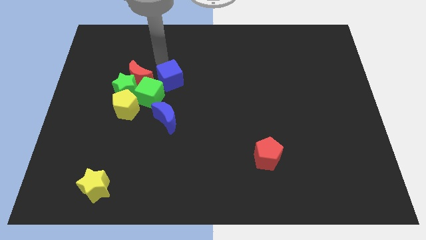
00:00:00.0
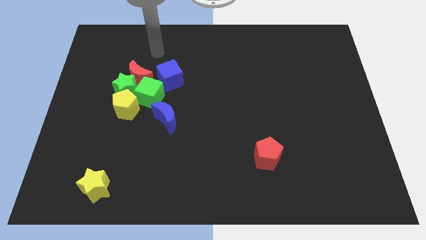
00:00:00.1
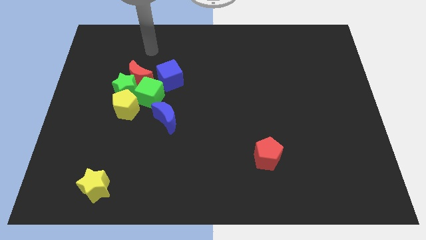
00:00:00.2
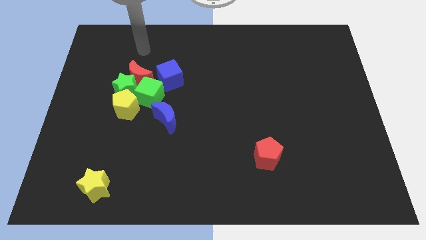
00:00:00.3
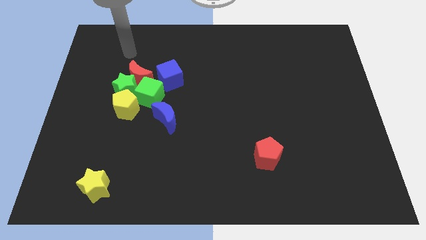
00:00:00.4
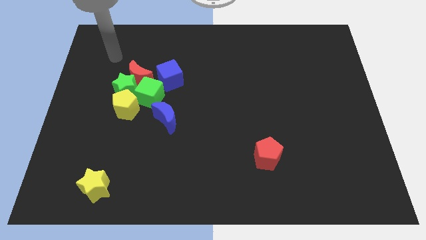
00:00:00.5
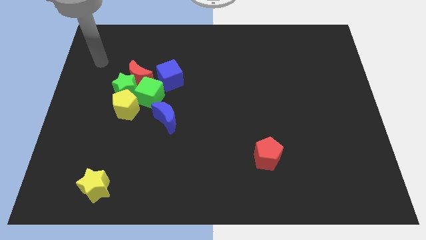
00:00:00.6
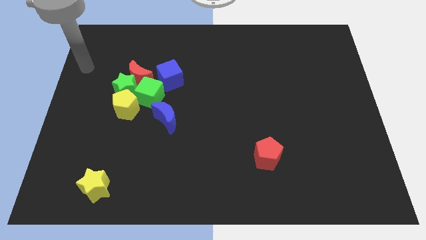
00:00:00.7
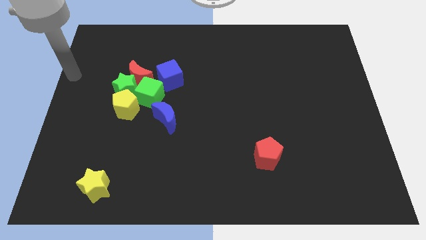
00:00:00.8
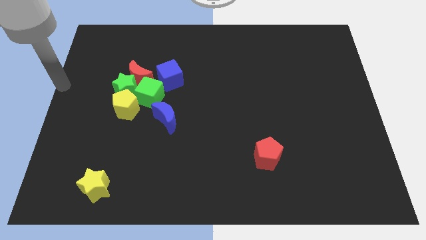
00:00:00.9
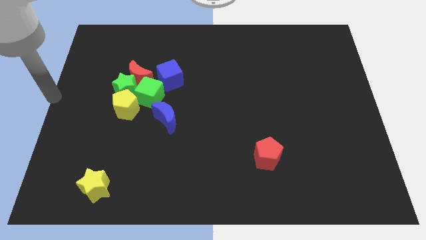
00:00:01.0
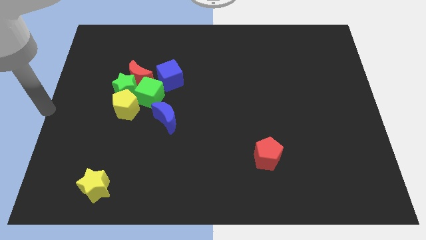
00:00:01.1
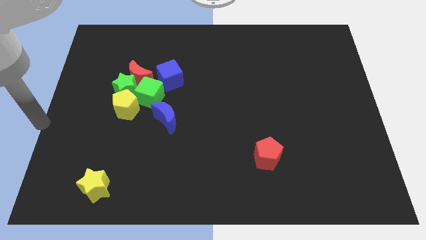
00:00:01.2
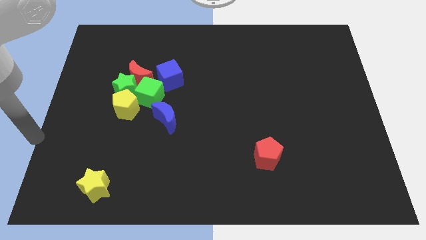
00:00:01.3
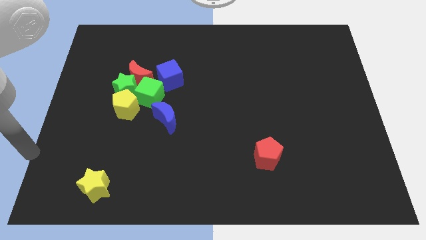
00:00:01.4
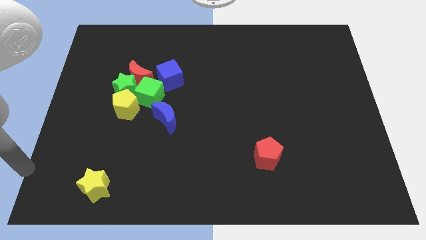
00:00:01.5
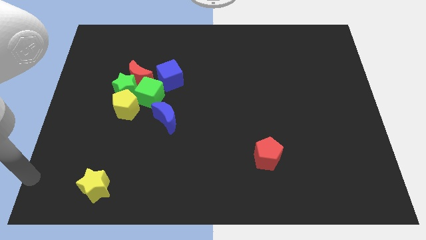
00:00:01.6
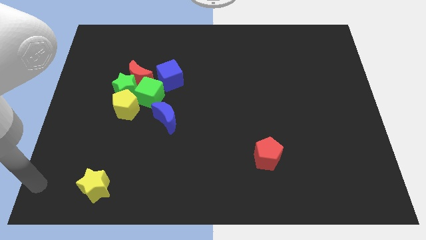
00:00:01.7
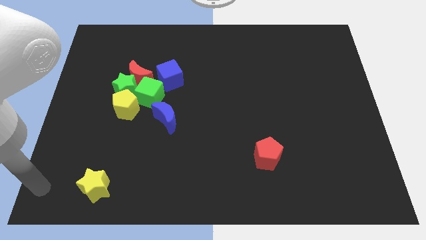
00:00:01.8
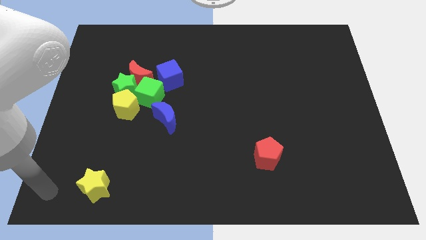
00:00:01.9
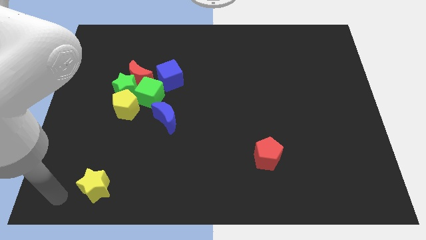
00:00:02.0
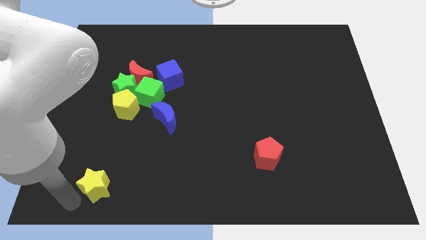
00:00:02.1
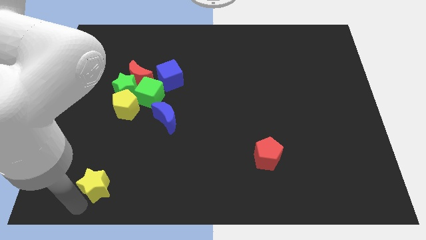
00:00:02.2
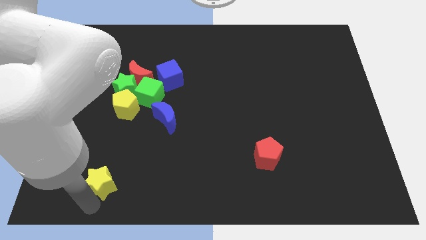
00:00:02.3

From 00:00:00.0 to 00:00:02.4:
move the arm under yellow star

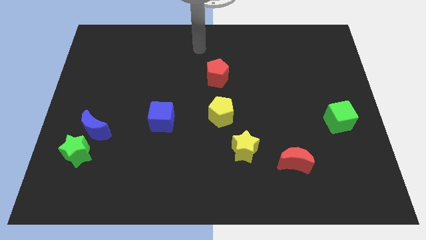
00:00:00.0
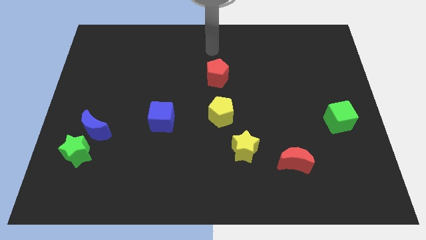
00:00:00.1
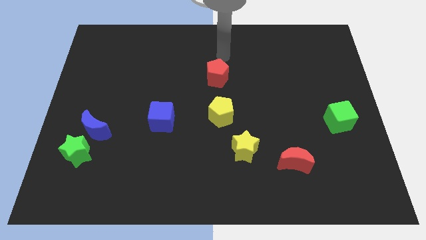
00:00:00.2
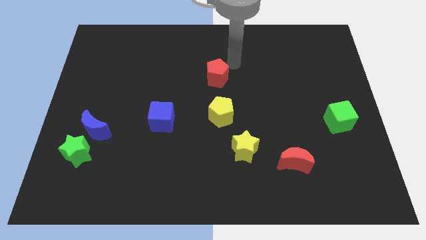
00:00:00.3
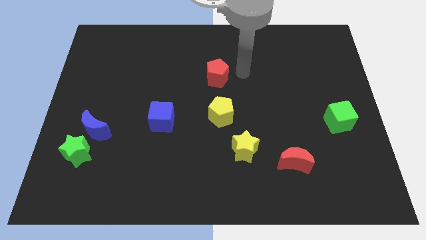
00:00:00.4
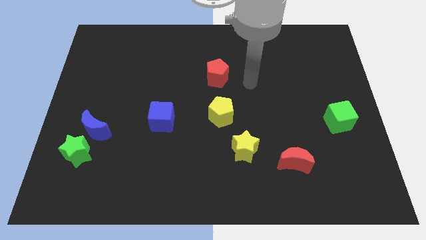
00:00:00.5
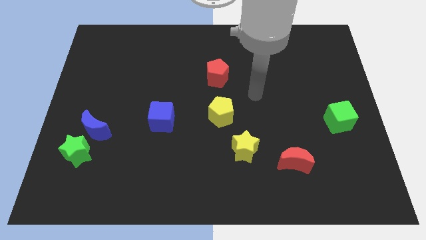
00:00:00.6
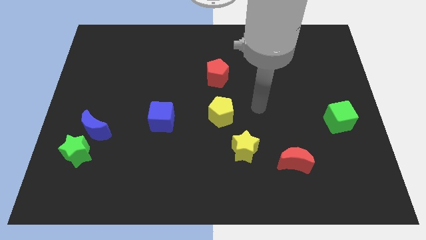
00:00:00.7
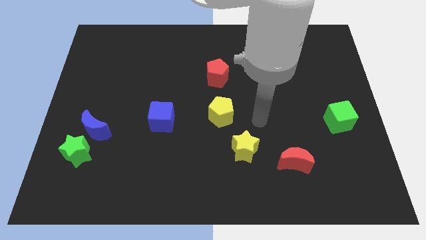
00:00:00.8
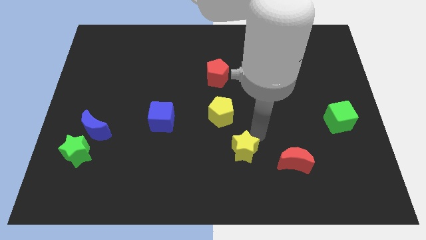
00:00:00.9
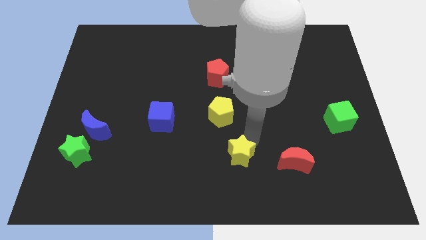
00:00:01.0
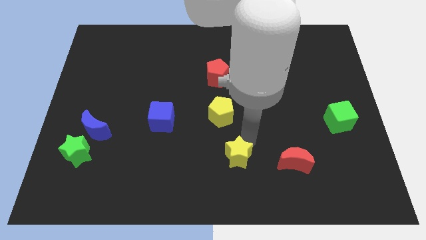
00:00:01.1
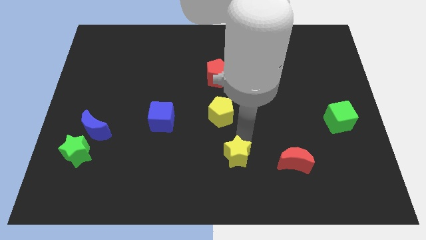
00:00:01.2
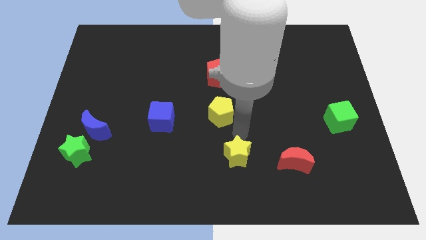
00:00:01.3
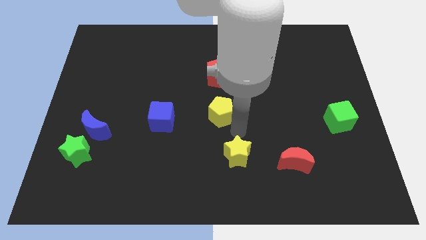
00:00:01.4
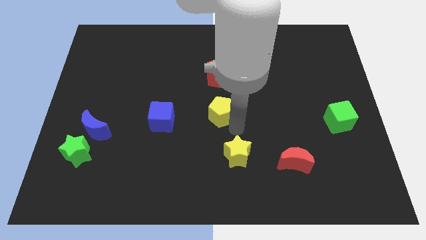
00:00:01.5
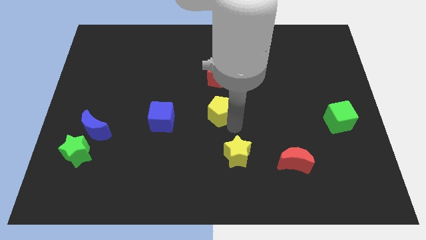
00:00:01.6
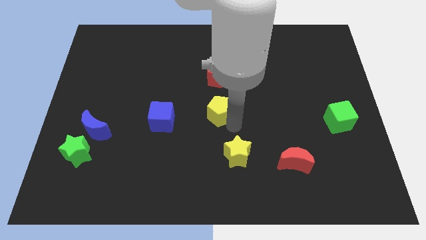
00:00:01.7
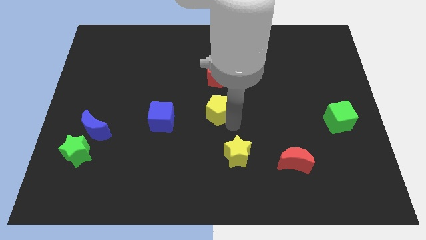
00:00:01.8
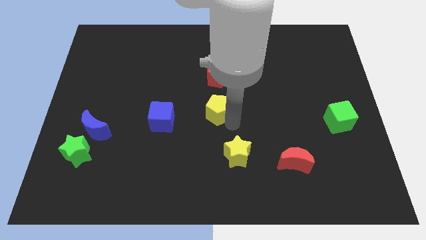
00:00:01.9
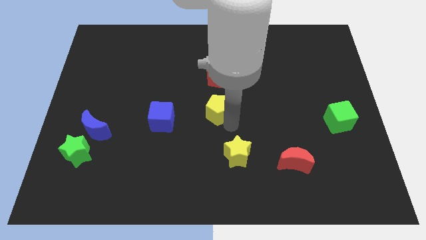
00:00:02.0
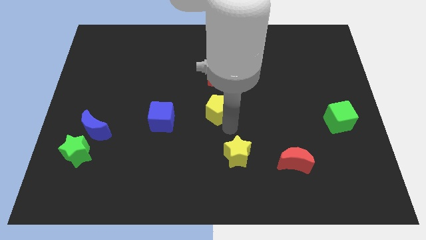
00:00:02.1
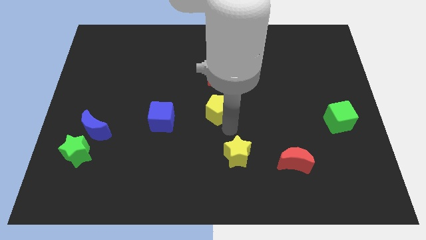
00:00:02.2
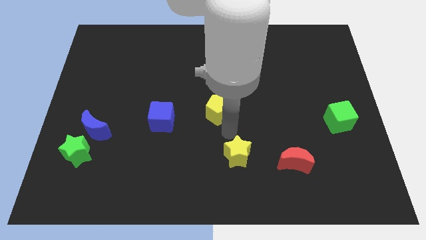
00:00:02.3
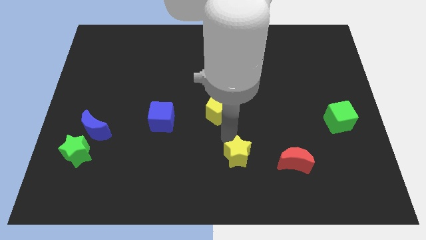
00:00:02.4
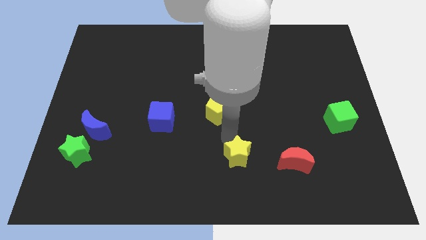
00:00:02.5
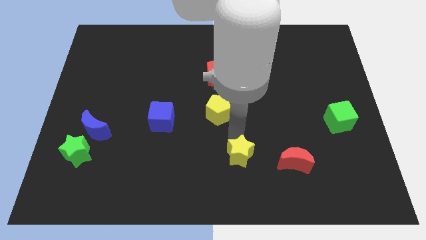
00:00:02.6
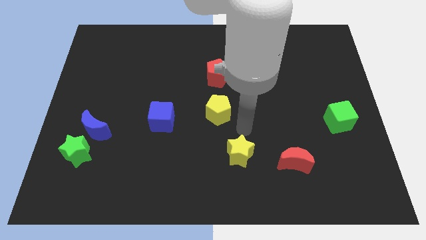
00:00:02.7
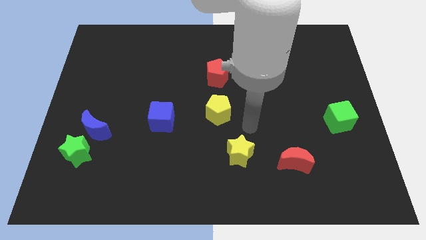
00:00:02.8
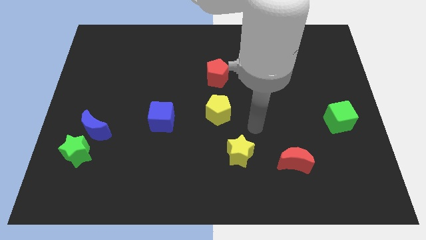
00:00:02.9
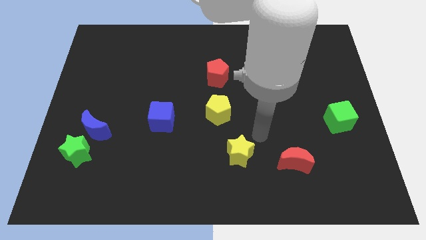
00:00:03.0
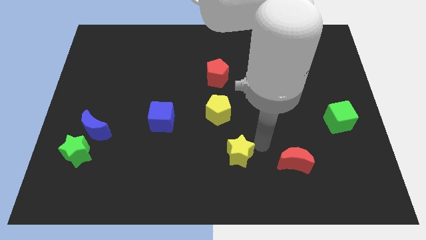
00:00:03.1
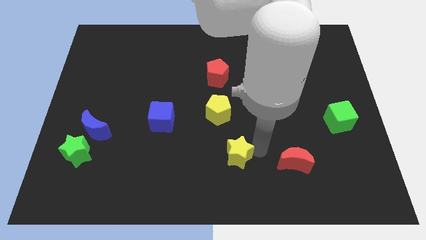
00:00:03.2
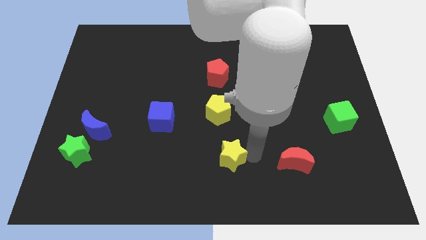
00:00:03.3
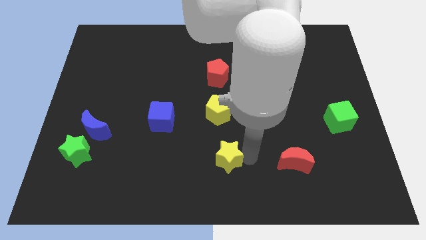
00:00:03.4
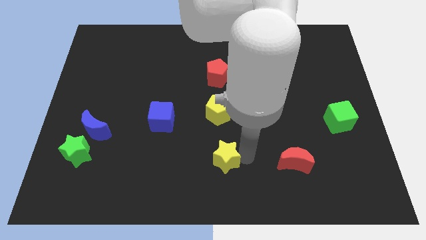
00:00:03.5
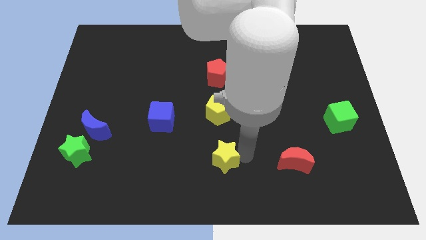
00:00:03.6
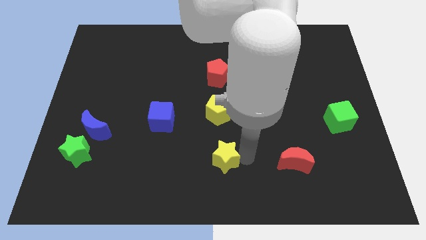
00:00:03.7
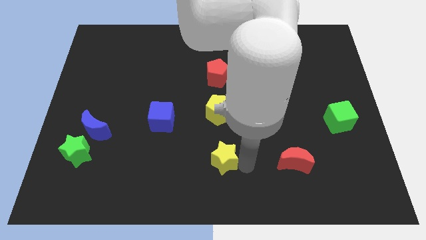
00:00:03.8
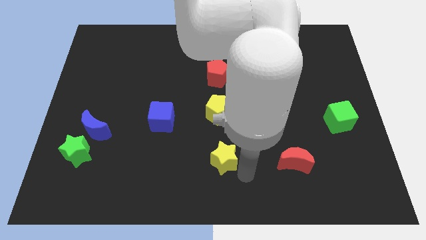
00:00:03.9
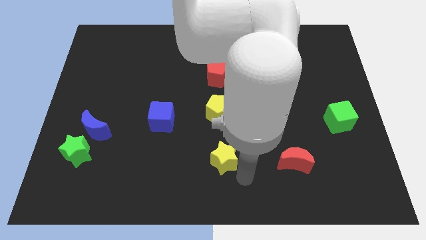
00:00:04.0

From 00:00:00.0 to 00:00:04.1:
put yellow star below the pentagon

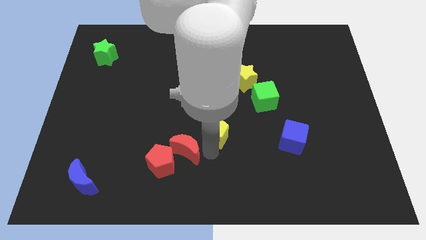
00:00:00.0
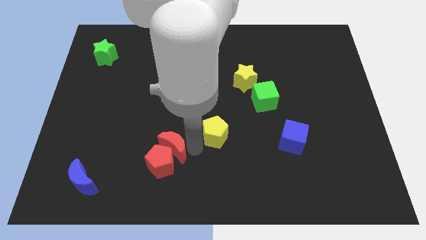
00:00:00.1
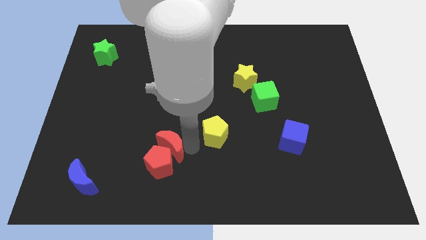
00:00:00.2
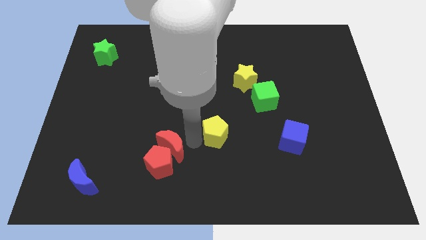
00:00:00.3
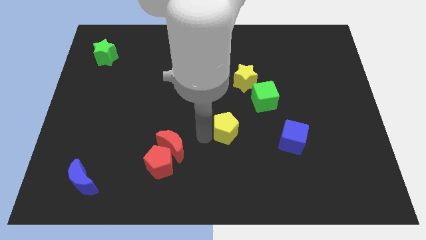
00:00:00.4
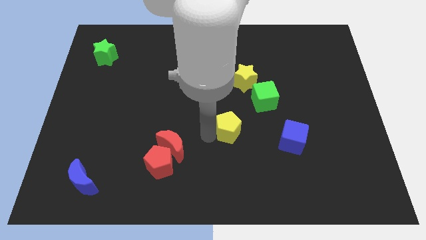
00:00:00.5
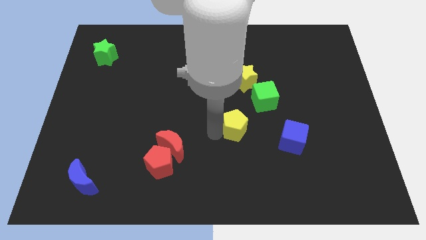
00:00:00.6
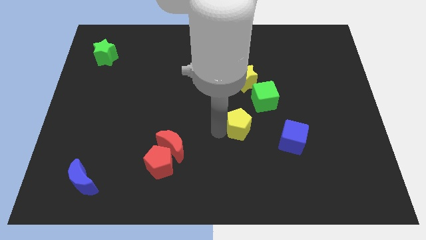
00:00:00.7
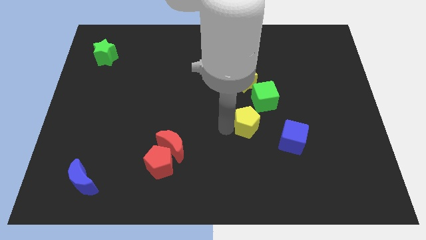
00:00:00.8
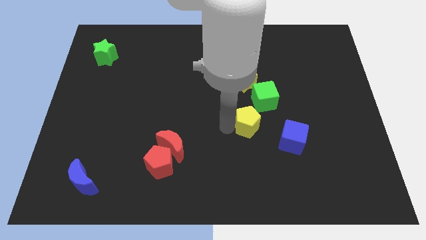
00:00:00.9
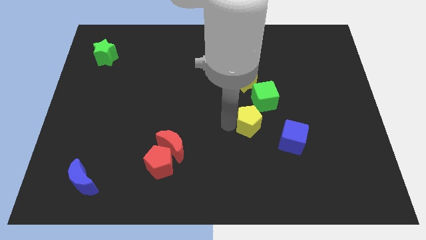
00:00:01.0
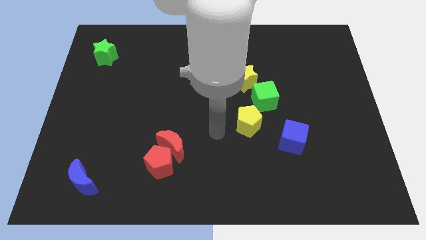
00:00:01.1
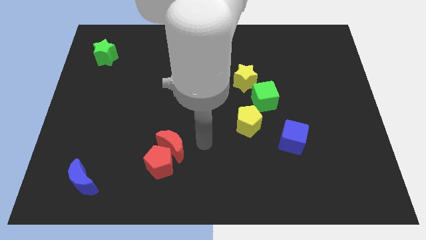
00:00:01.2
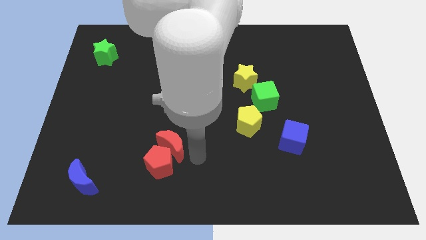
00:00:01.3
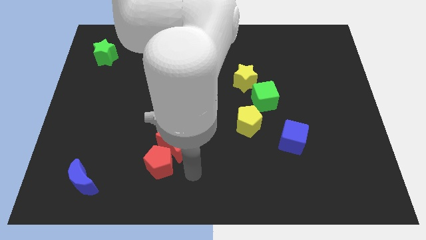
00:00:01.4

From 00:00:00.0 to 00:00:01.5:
move yellow pentagon close to the green cube

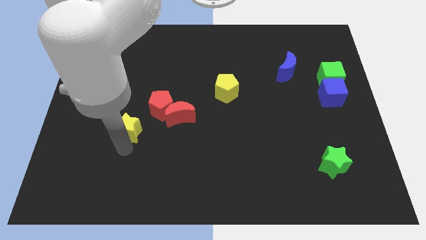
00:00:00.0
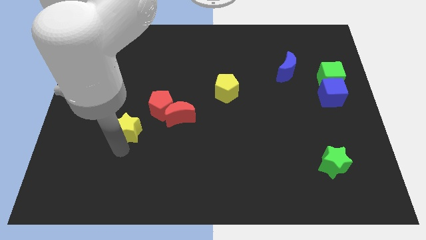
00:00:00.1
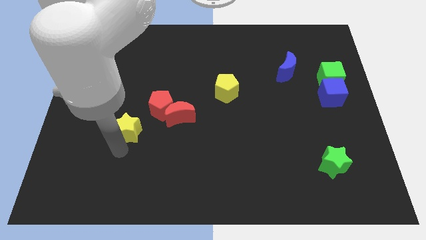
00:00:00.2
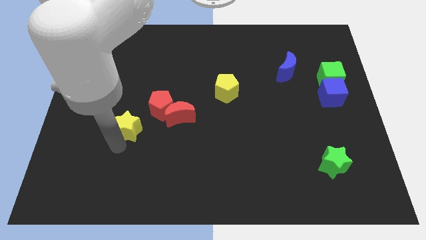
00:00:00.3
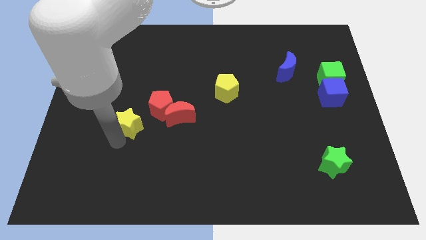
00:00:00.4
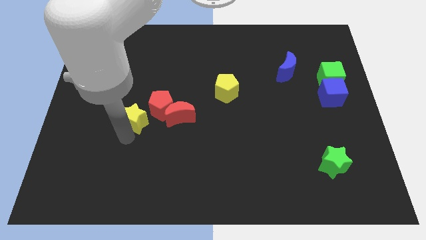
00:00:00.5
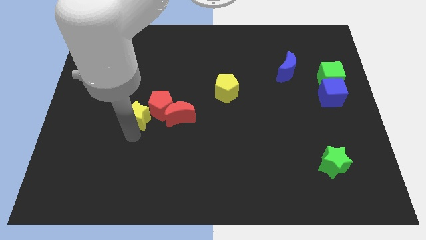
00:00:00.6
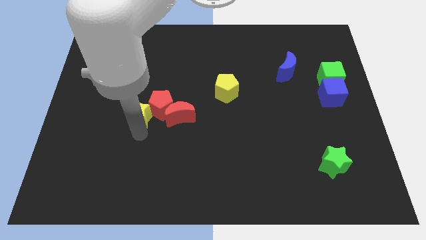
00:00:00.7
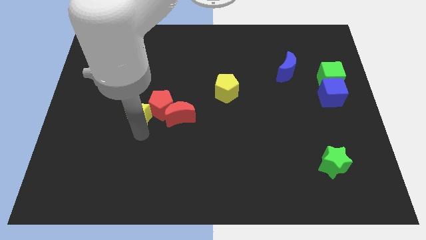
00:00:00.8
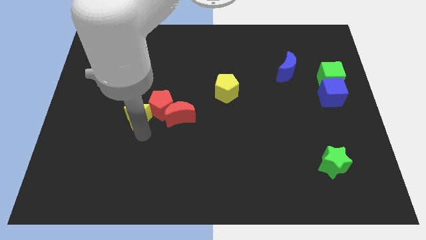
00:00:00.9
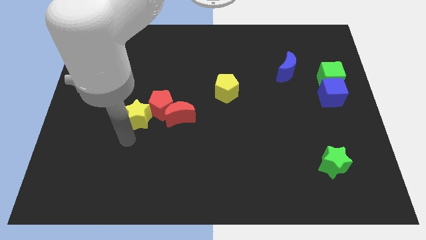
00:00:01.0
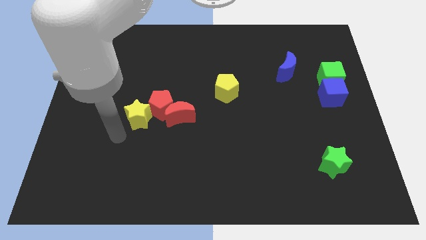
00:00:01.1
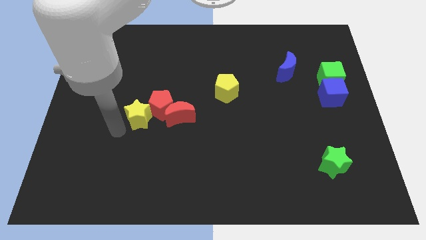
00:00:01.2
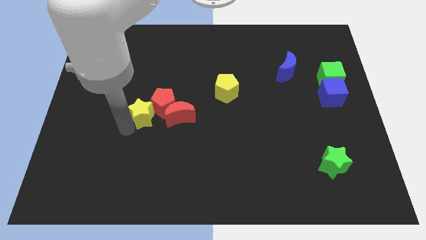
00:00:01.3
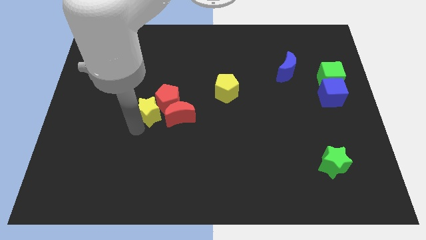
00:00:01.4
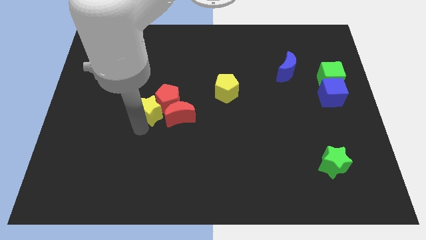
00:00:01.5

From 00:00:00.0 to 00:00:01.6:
push the yellow star into the red pentagon
